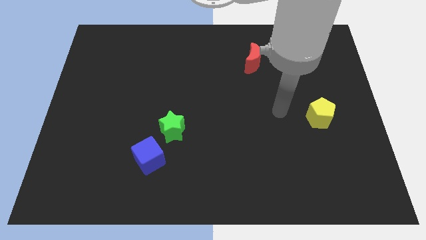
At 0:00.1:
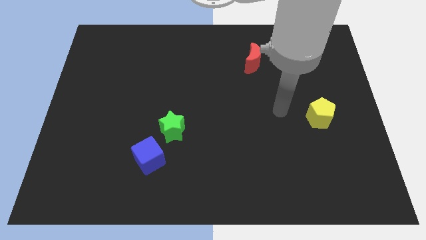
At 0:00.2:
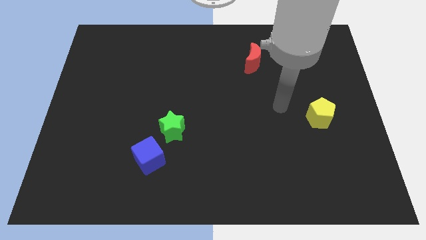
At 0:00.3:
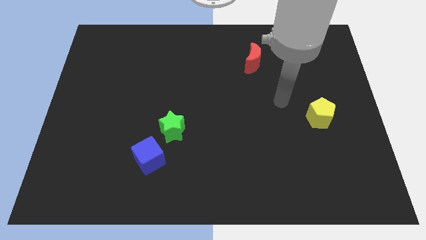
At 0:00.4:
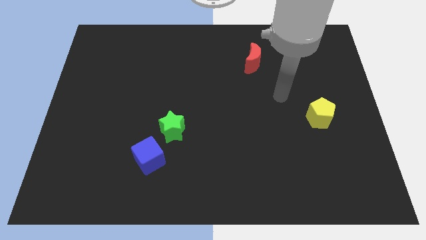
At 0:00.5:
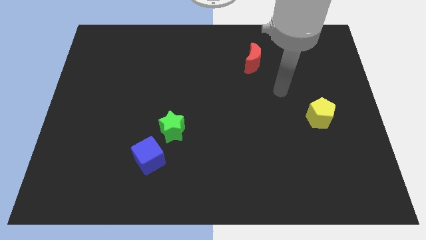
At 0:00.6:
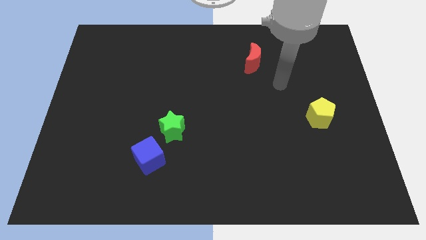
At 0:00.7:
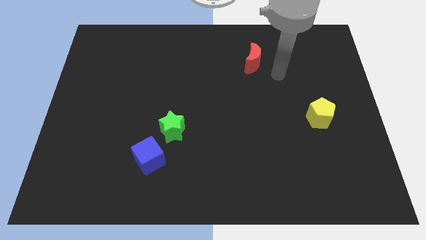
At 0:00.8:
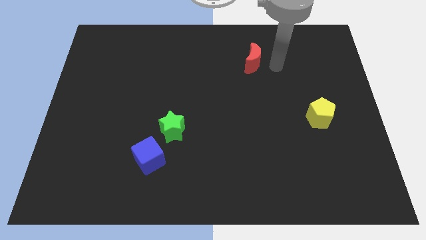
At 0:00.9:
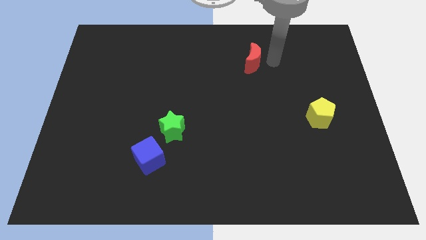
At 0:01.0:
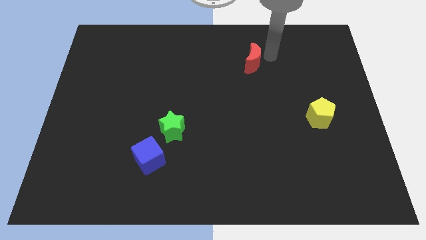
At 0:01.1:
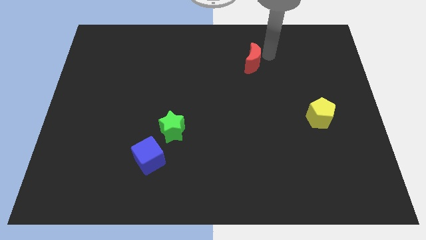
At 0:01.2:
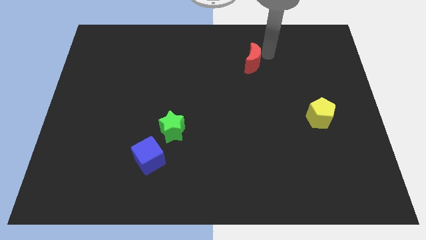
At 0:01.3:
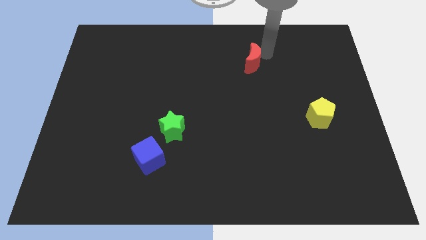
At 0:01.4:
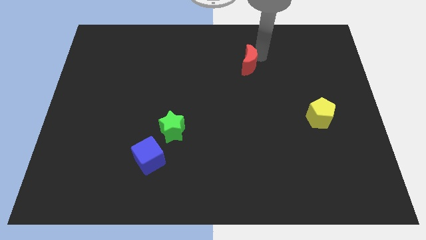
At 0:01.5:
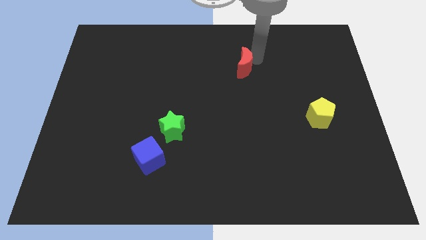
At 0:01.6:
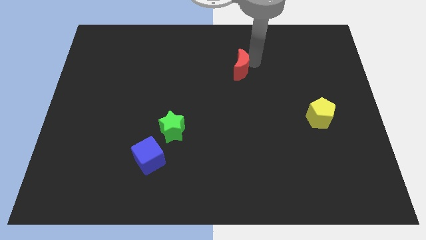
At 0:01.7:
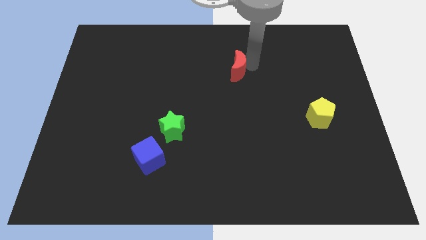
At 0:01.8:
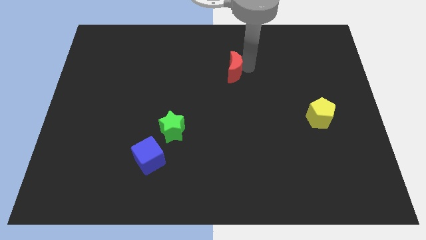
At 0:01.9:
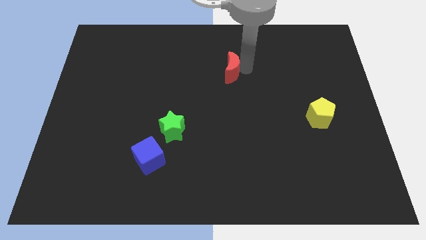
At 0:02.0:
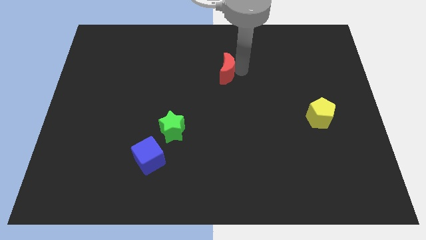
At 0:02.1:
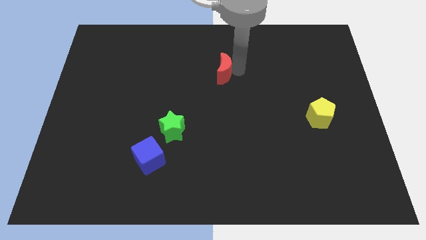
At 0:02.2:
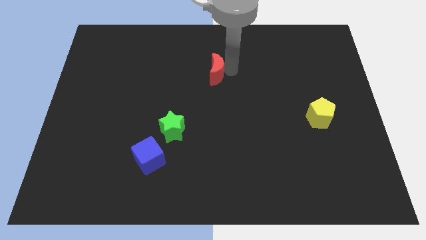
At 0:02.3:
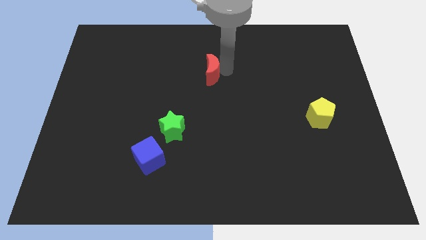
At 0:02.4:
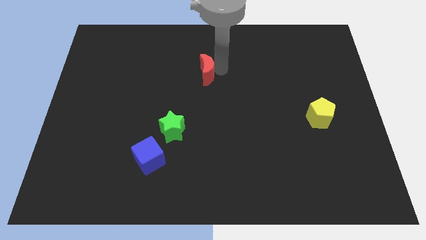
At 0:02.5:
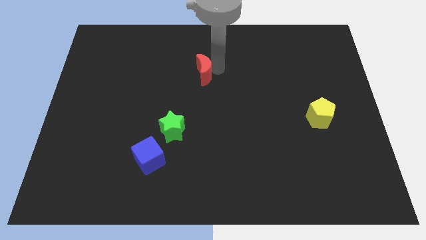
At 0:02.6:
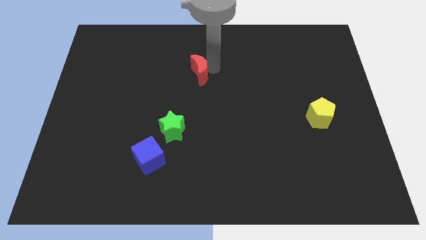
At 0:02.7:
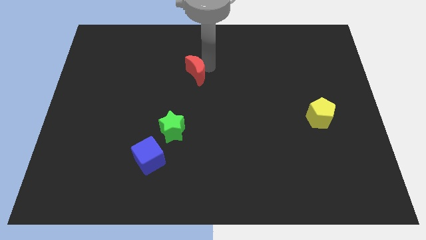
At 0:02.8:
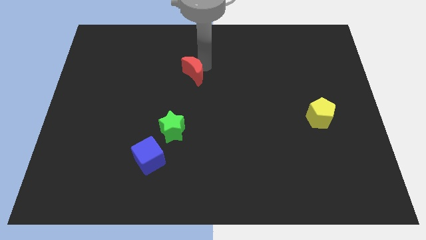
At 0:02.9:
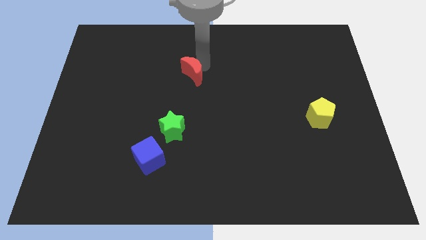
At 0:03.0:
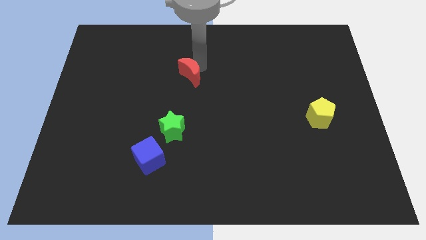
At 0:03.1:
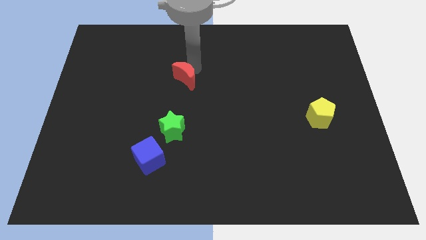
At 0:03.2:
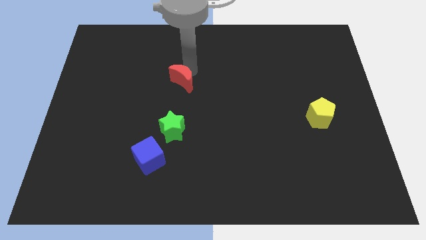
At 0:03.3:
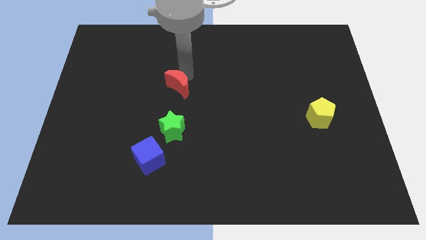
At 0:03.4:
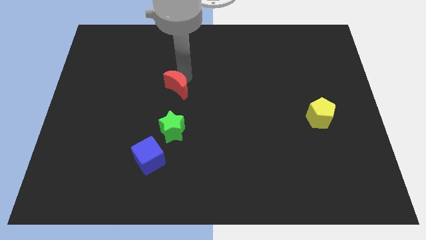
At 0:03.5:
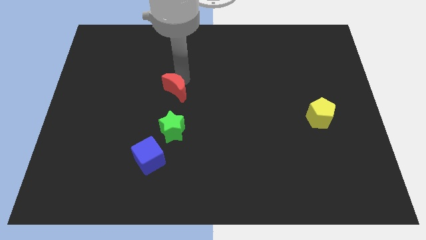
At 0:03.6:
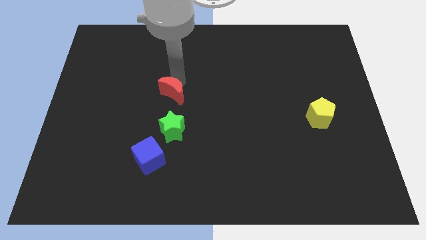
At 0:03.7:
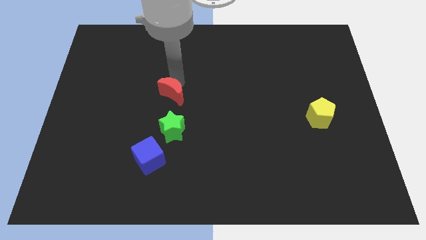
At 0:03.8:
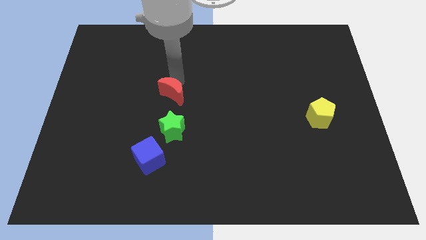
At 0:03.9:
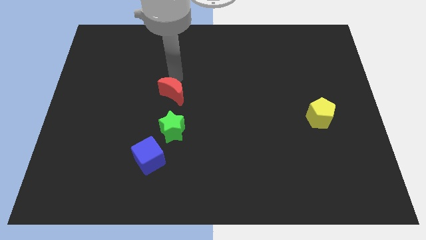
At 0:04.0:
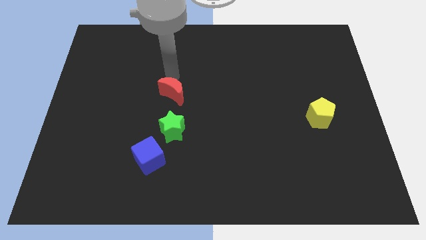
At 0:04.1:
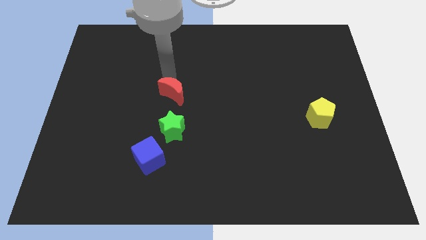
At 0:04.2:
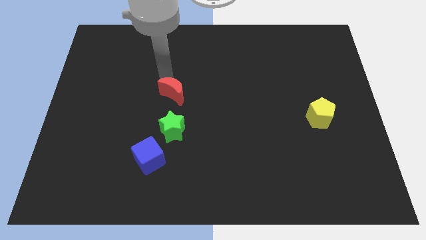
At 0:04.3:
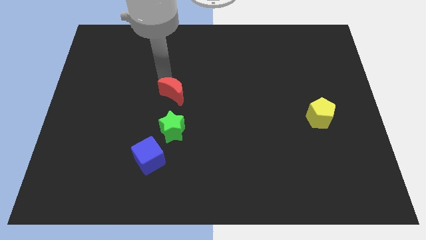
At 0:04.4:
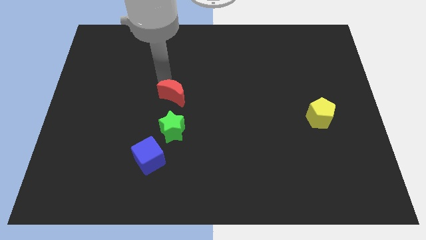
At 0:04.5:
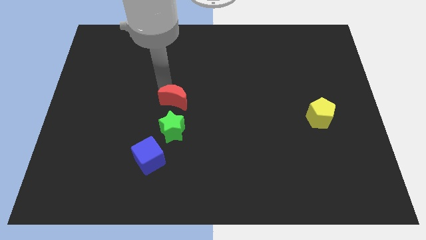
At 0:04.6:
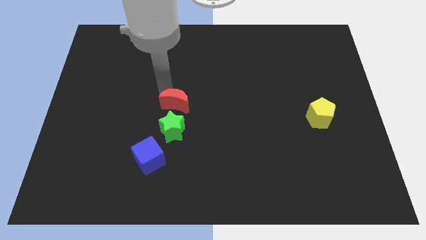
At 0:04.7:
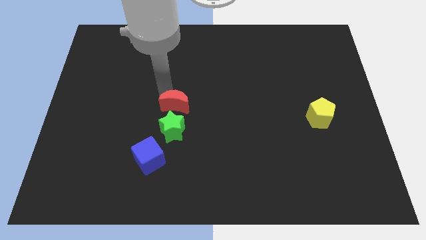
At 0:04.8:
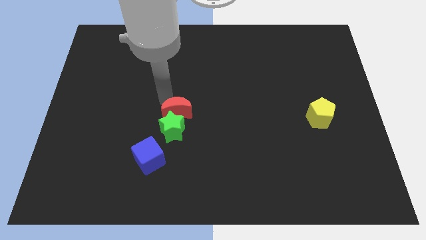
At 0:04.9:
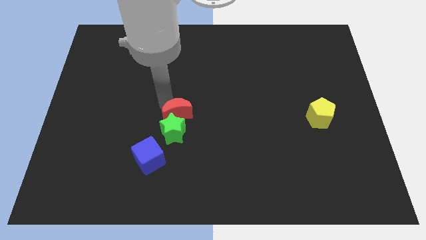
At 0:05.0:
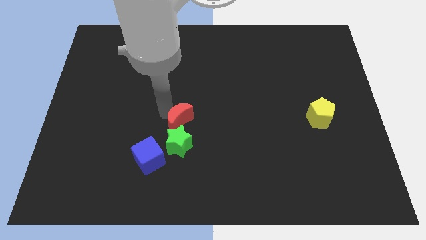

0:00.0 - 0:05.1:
push the moon next to the green star

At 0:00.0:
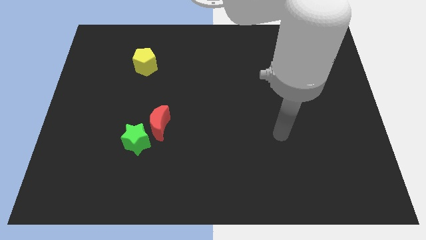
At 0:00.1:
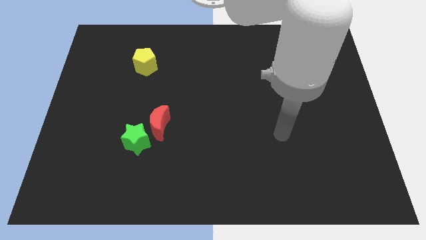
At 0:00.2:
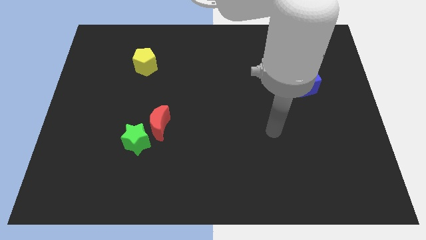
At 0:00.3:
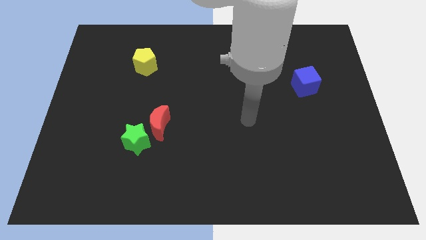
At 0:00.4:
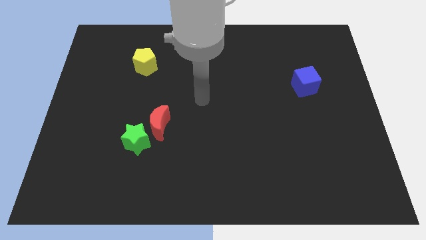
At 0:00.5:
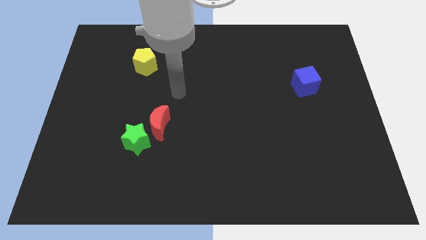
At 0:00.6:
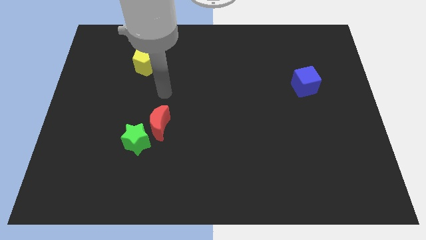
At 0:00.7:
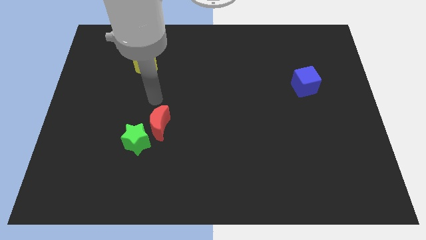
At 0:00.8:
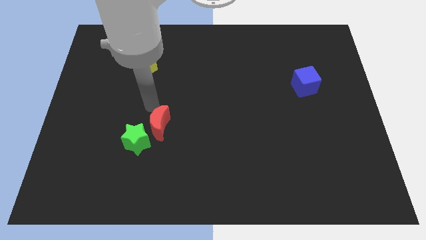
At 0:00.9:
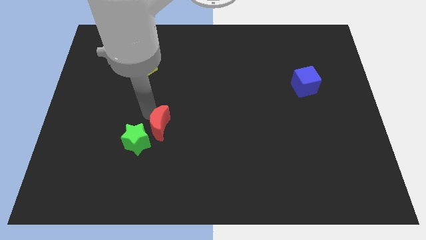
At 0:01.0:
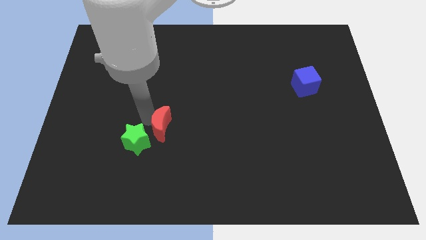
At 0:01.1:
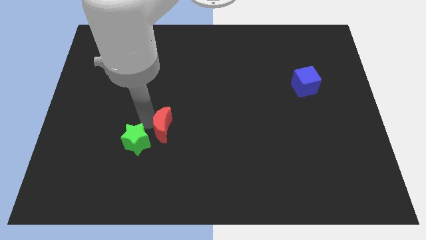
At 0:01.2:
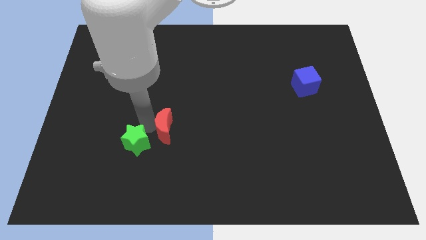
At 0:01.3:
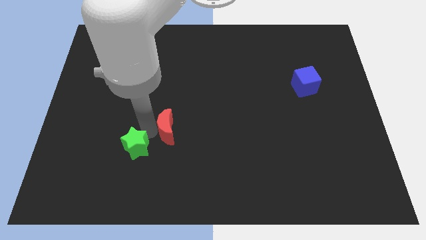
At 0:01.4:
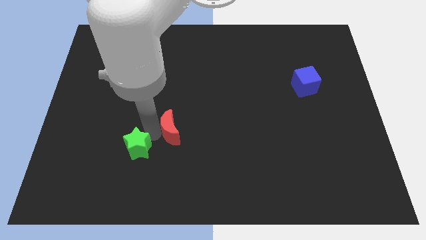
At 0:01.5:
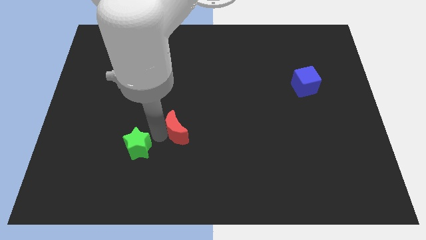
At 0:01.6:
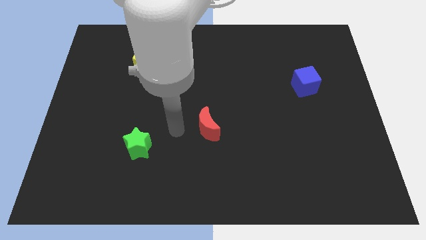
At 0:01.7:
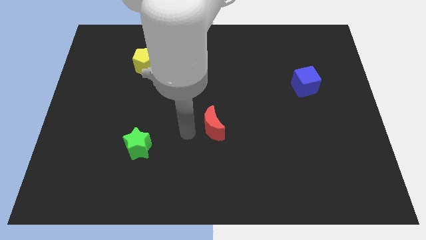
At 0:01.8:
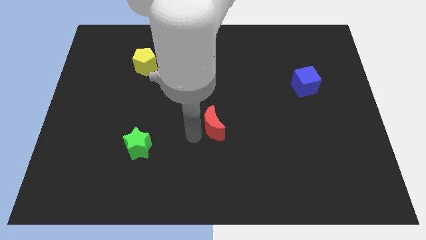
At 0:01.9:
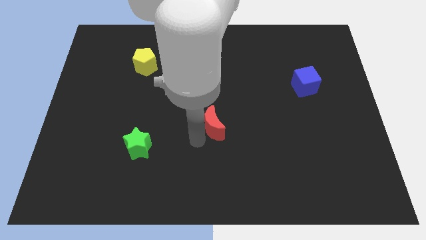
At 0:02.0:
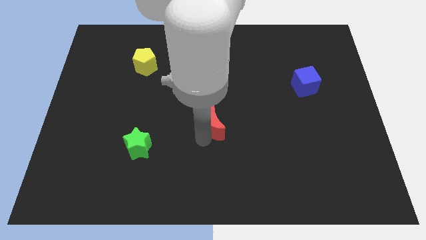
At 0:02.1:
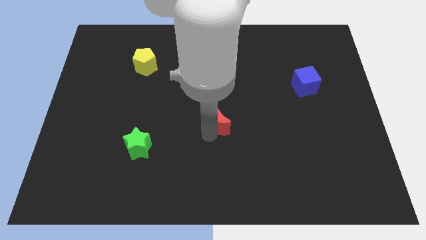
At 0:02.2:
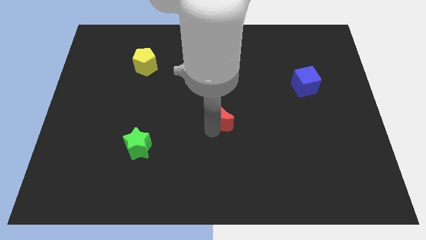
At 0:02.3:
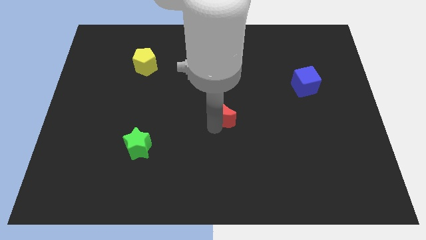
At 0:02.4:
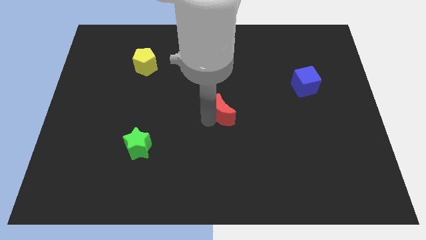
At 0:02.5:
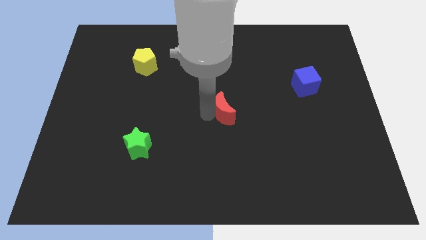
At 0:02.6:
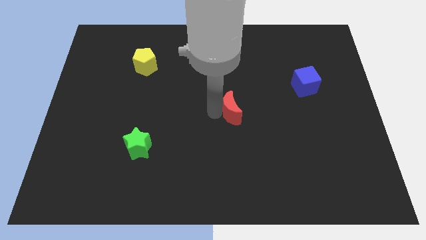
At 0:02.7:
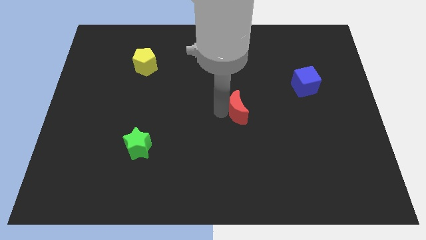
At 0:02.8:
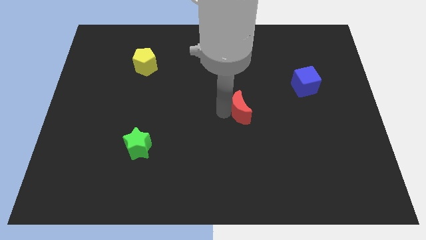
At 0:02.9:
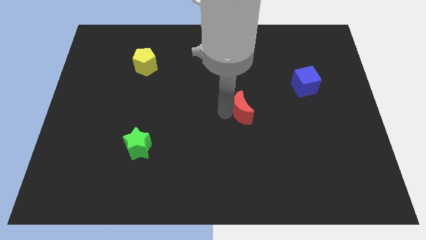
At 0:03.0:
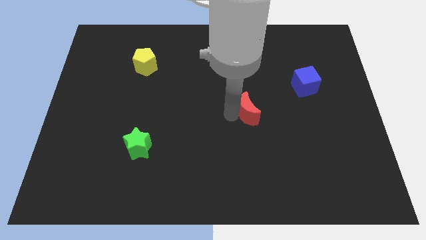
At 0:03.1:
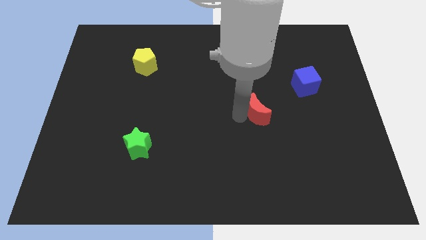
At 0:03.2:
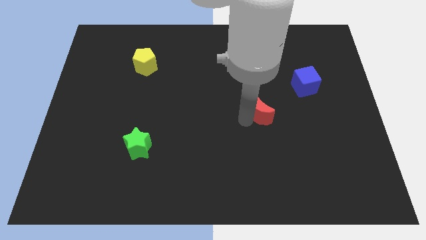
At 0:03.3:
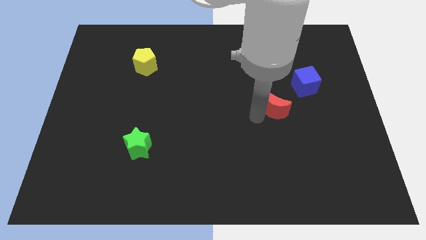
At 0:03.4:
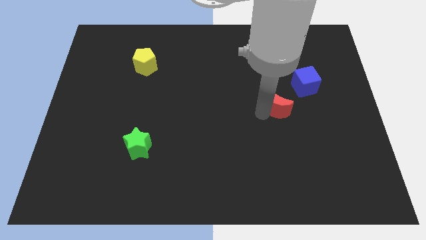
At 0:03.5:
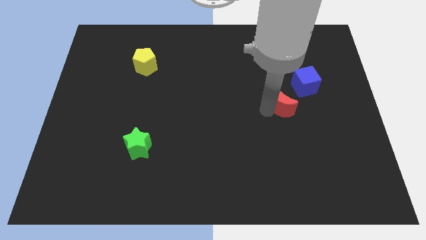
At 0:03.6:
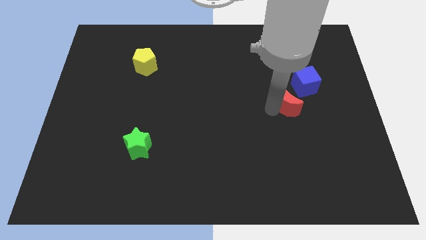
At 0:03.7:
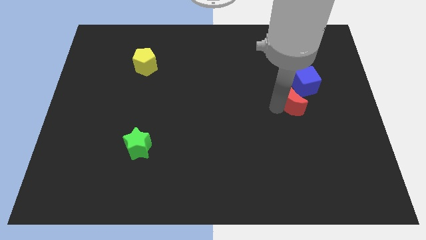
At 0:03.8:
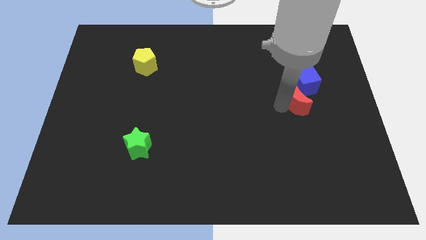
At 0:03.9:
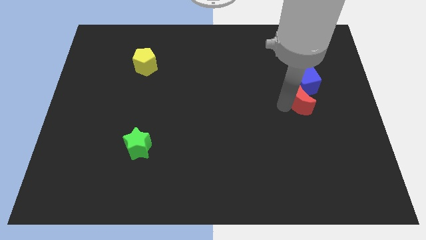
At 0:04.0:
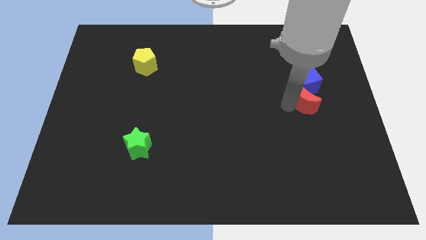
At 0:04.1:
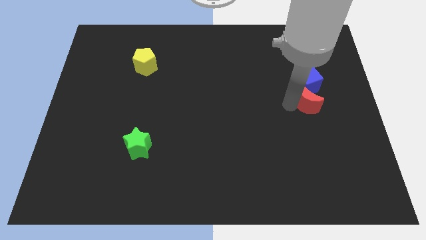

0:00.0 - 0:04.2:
push the red block next to the cube
